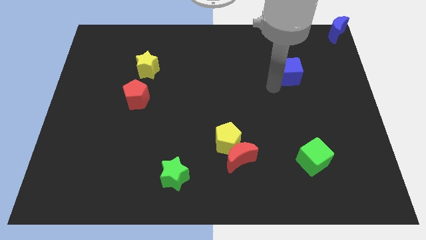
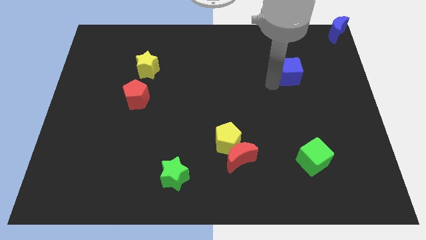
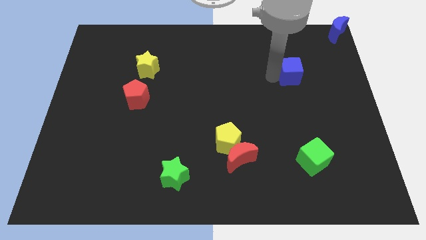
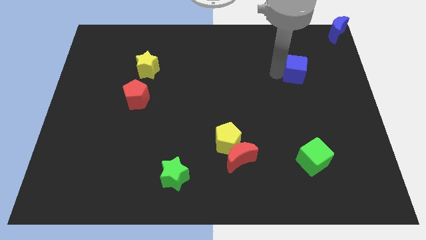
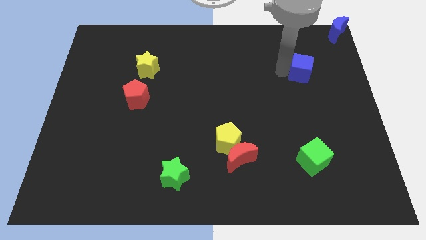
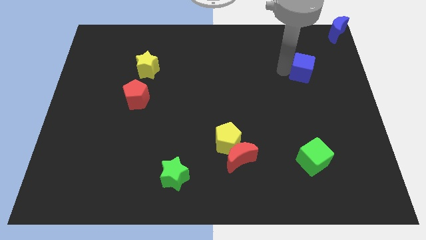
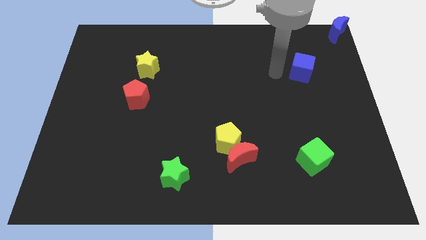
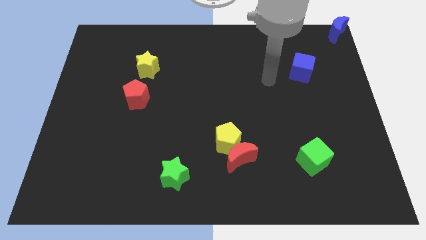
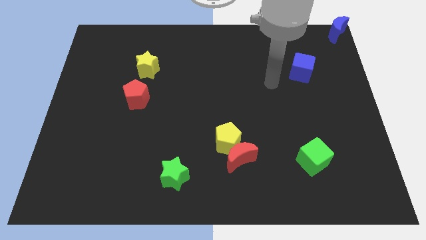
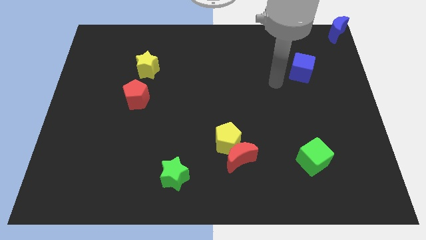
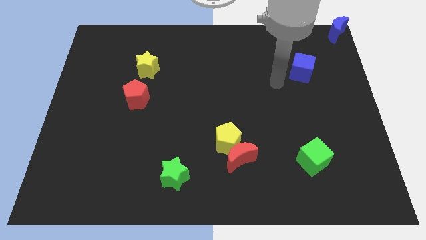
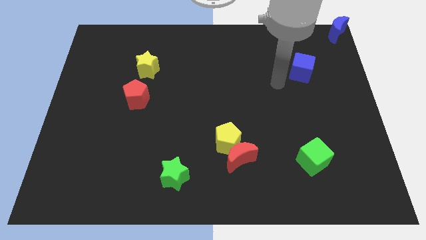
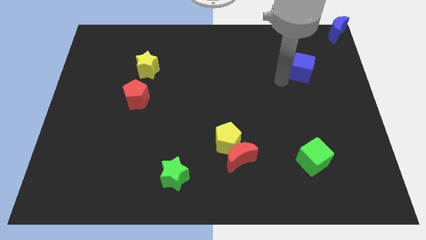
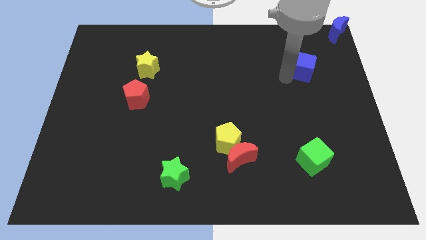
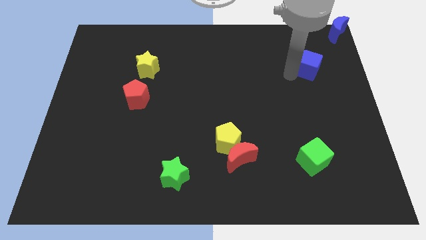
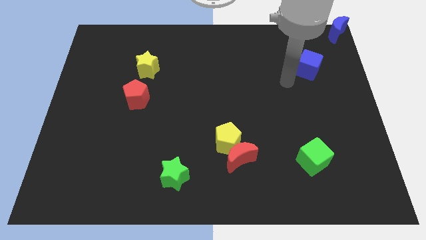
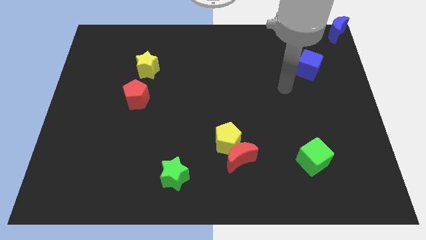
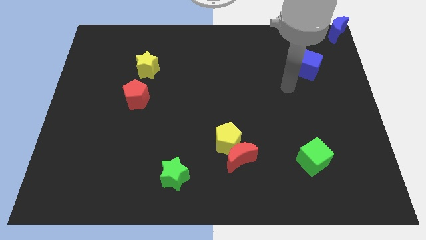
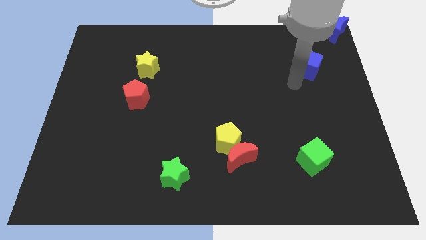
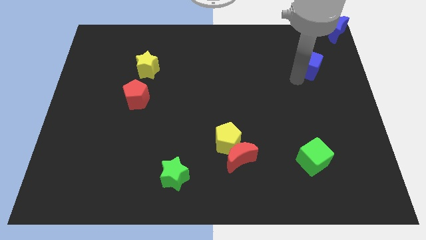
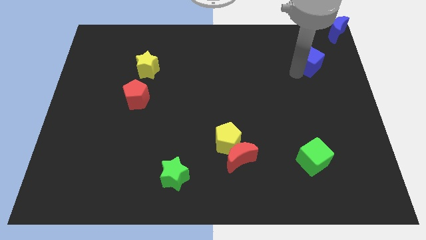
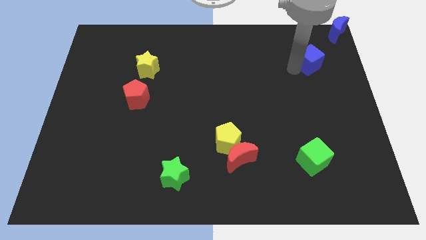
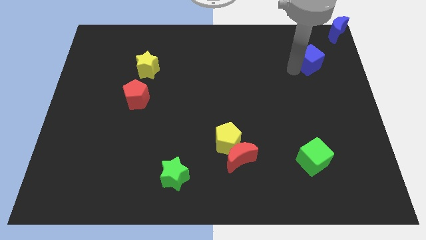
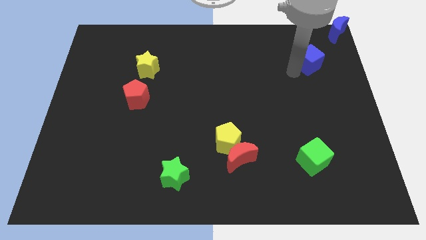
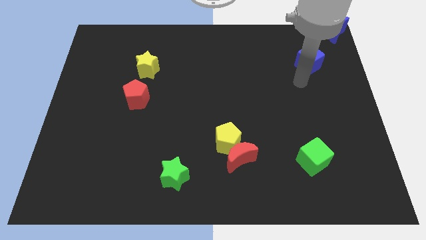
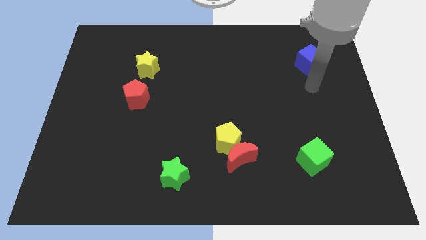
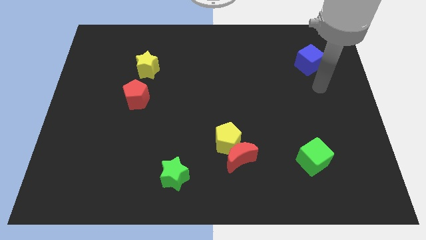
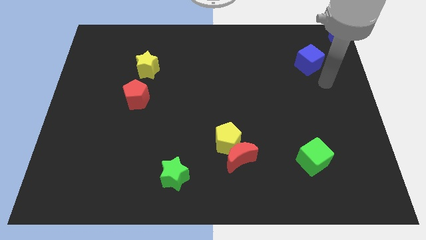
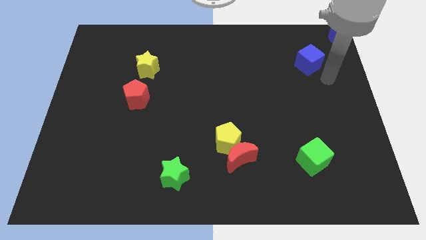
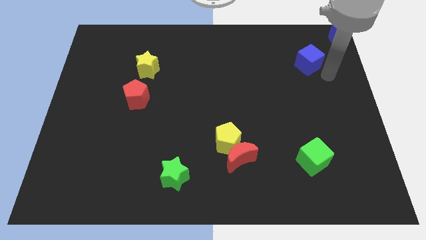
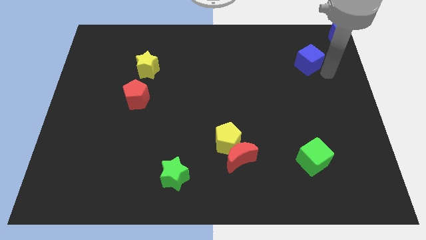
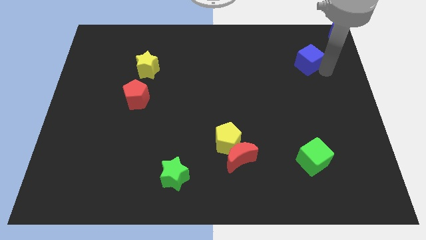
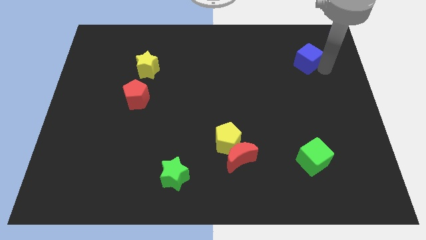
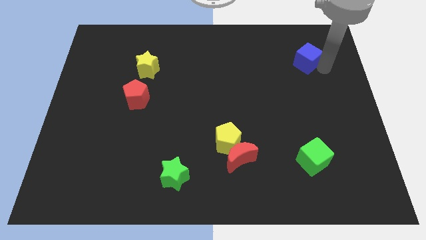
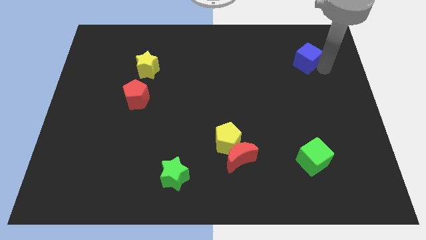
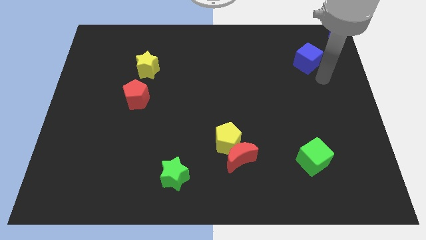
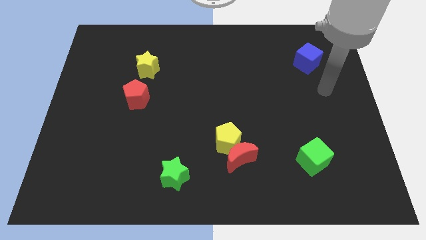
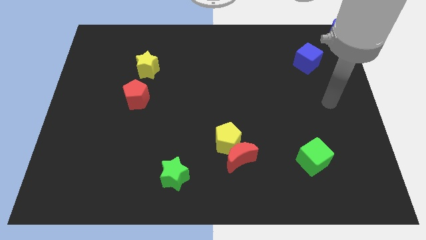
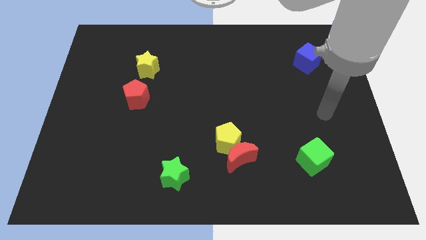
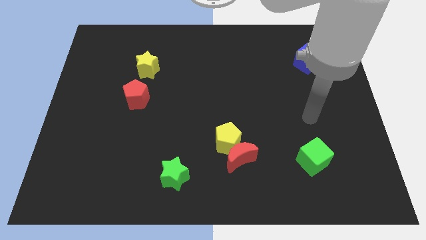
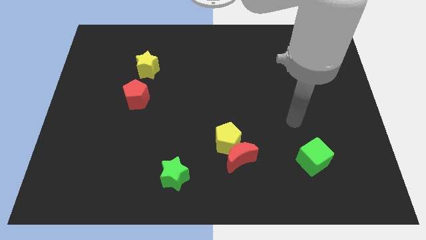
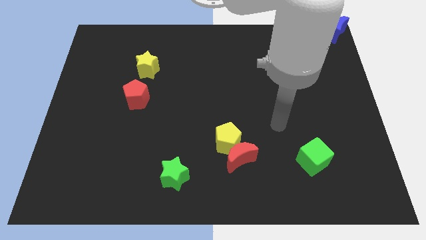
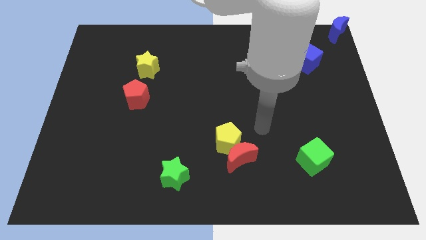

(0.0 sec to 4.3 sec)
place the blue cube diagonally to the bottom left of the blue moon

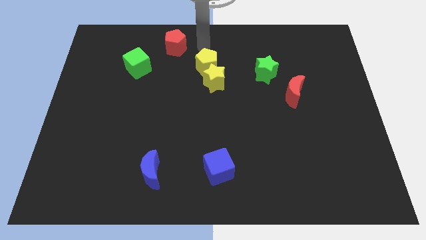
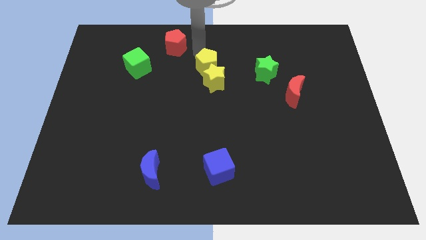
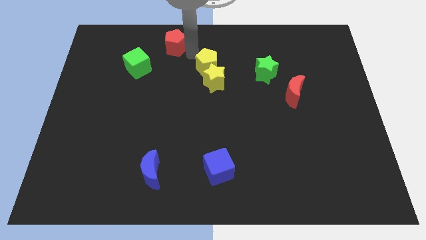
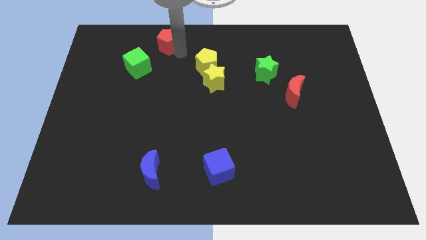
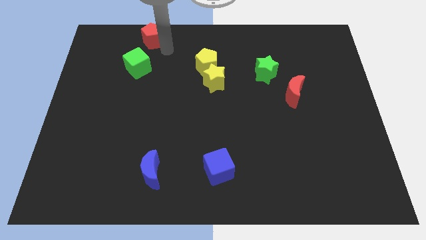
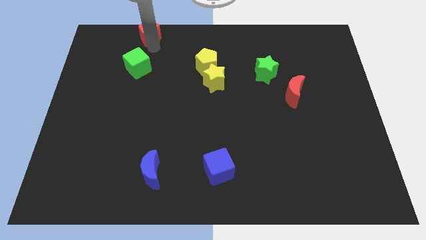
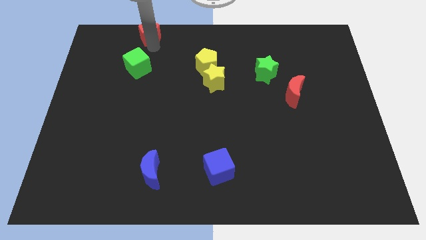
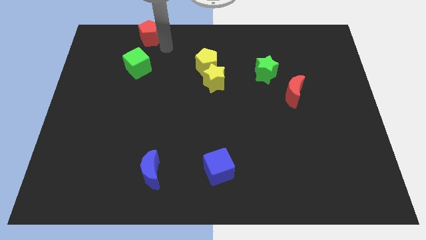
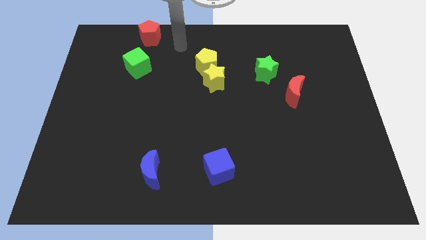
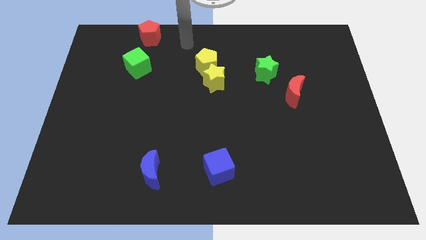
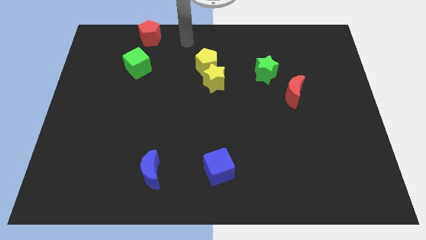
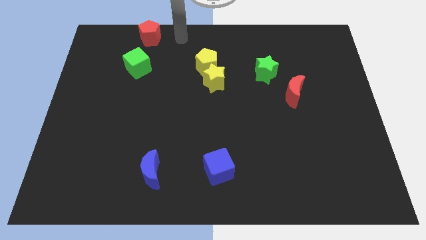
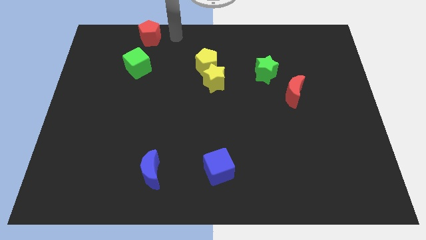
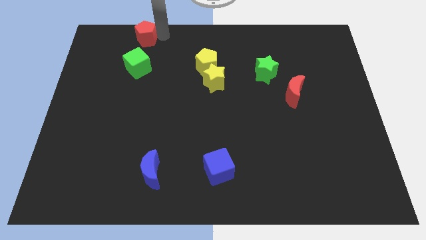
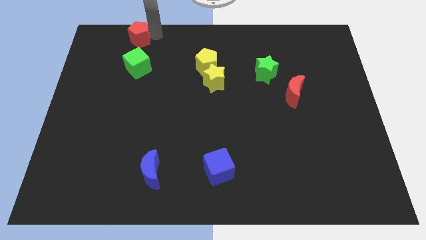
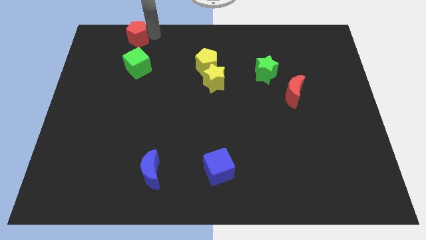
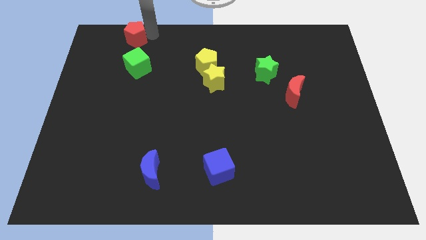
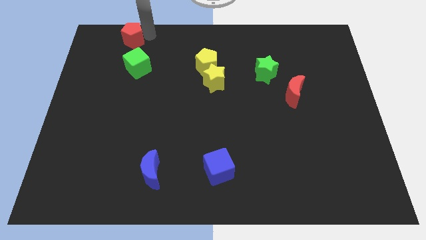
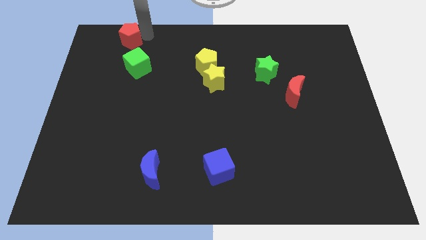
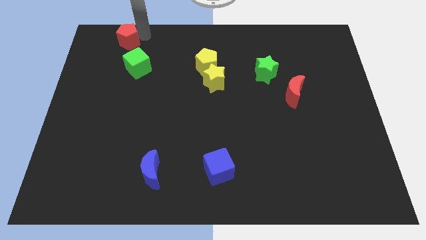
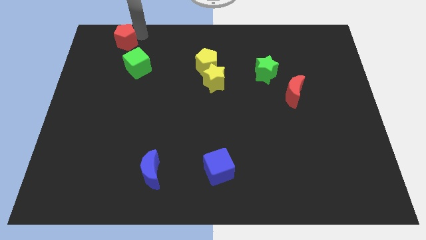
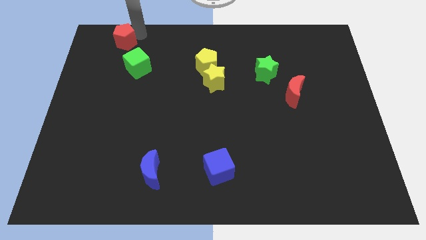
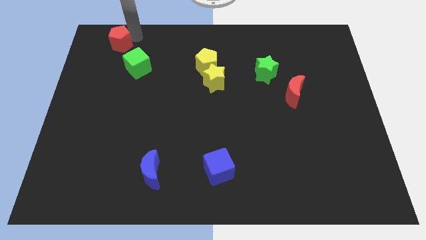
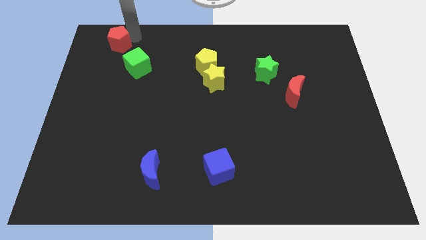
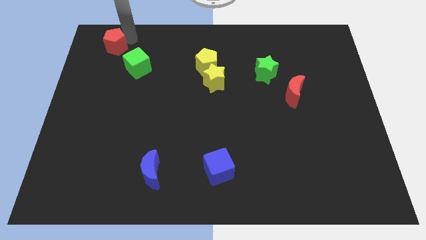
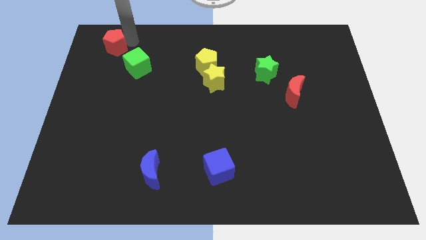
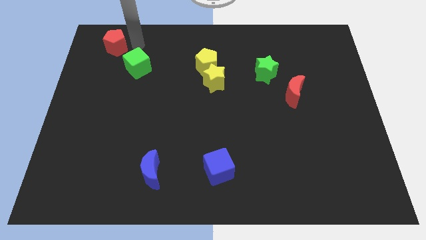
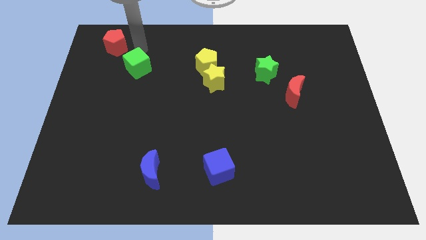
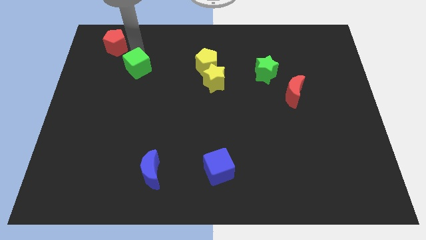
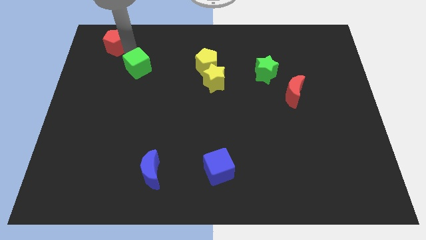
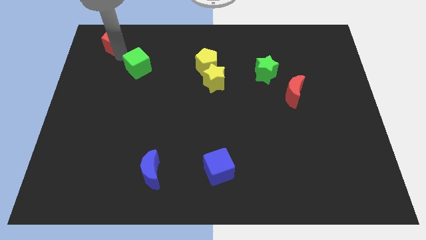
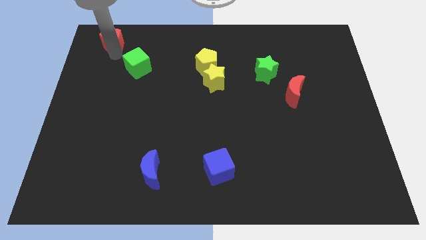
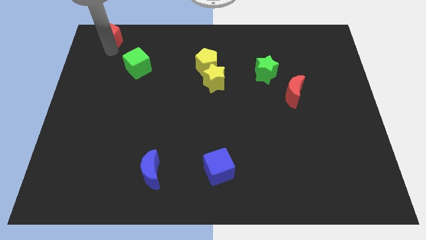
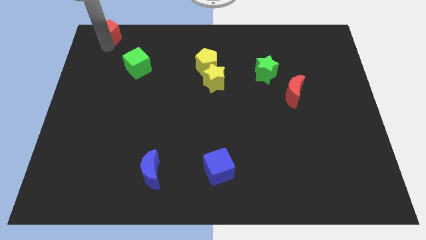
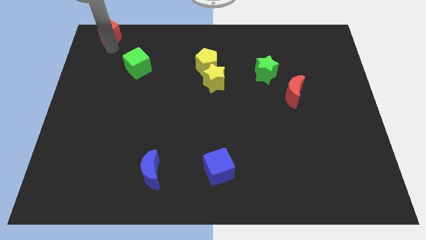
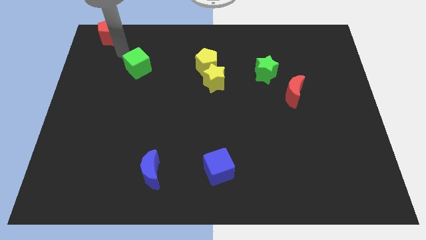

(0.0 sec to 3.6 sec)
push the red pentagon to the top left of the green cube

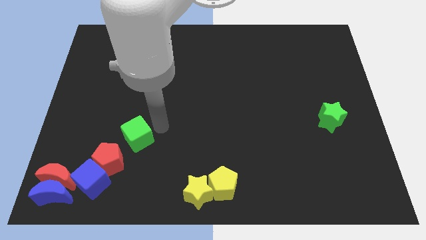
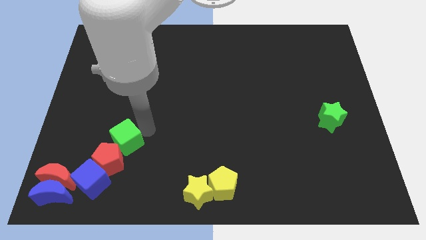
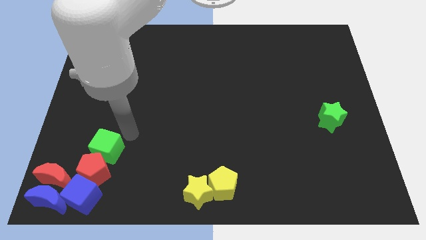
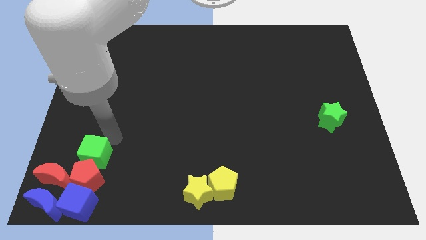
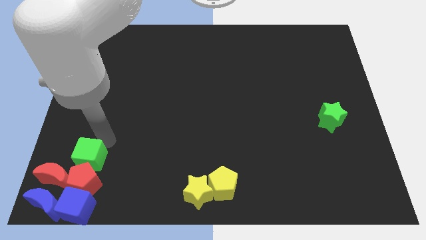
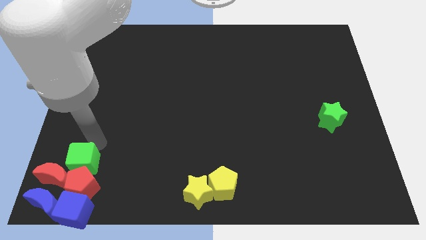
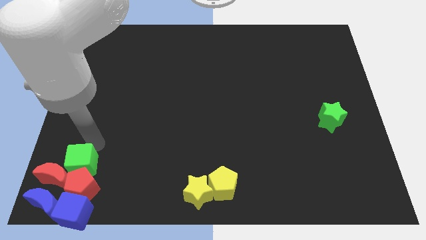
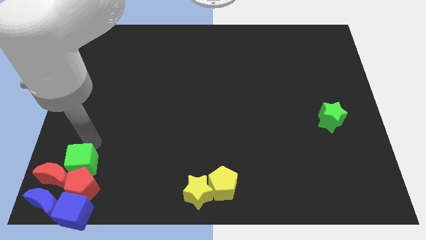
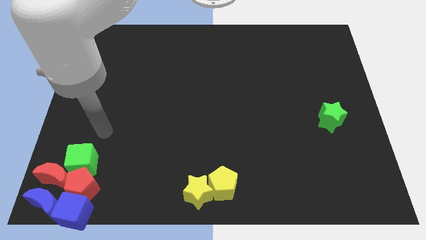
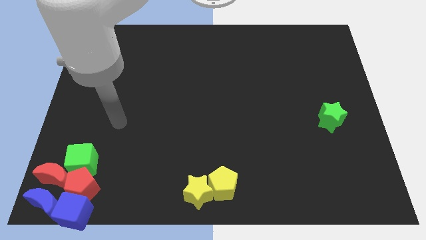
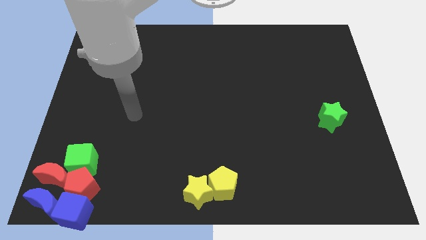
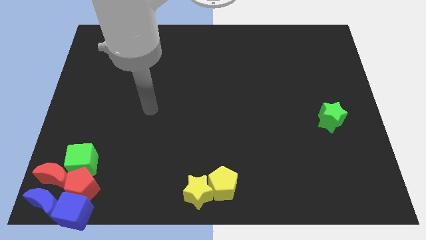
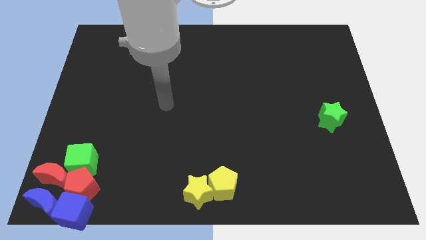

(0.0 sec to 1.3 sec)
push the green cube into the red pentagon
